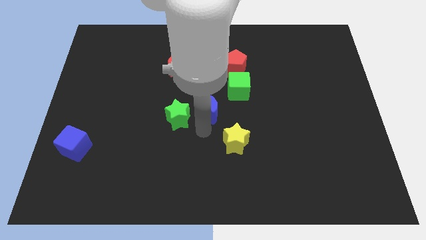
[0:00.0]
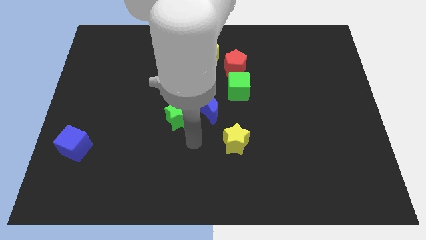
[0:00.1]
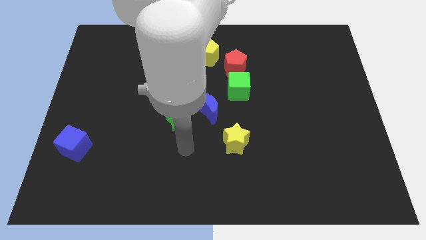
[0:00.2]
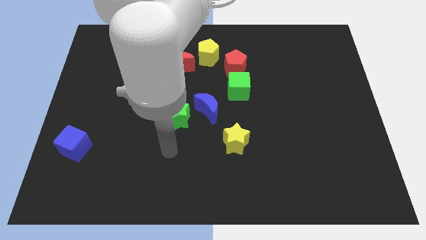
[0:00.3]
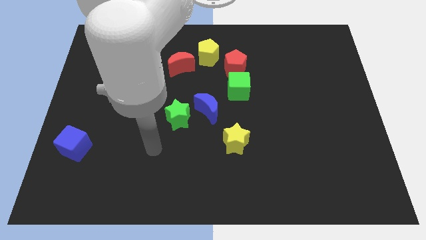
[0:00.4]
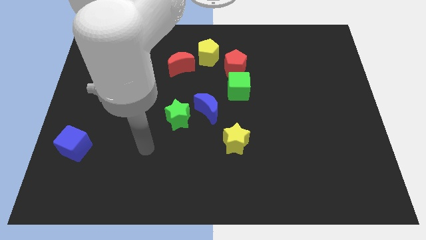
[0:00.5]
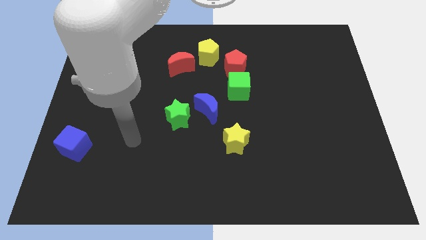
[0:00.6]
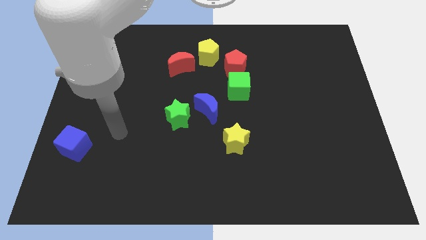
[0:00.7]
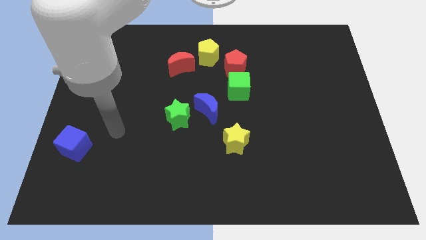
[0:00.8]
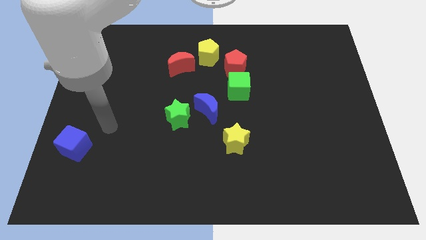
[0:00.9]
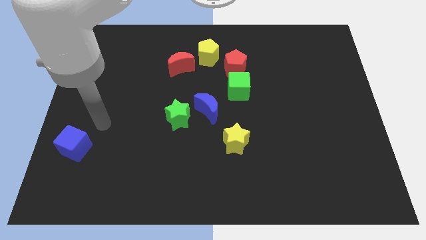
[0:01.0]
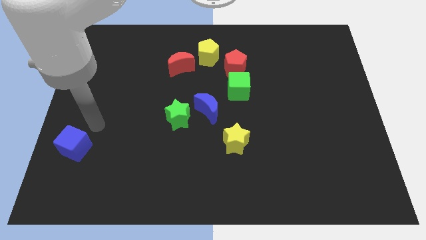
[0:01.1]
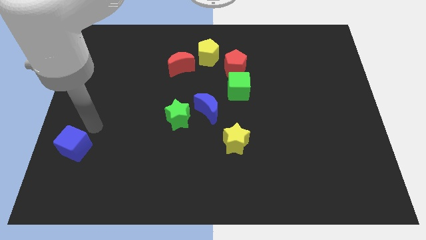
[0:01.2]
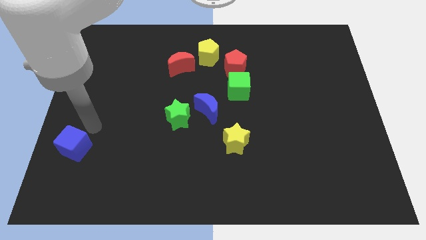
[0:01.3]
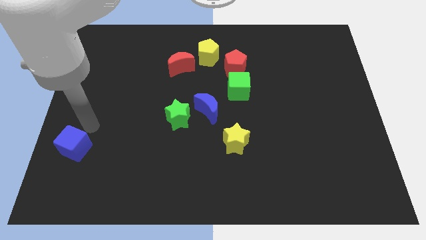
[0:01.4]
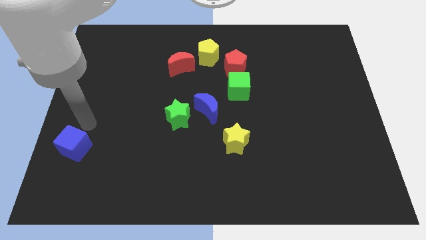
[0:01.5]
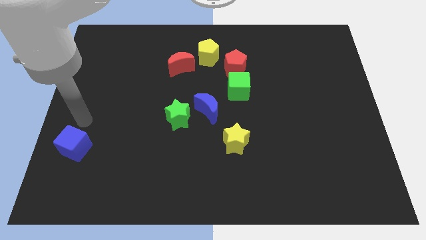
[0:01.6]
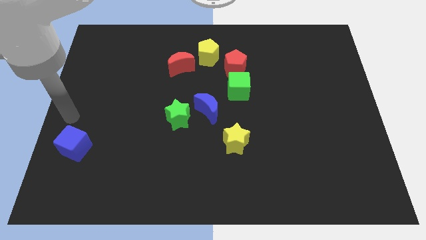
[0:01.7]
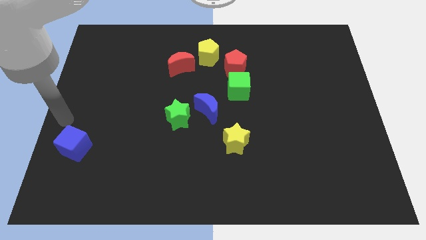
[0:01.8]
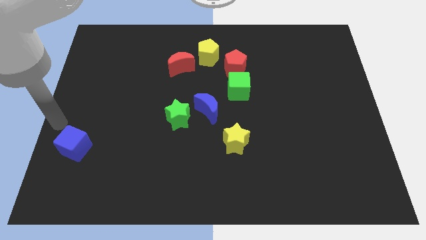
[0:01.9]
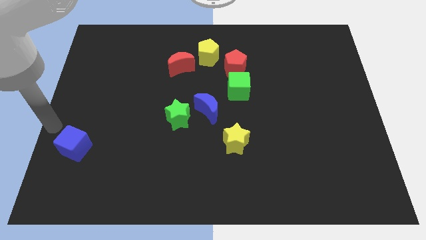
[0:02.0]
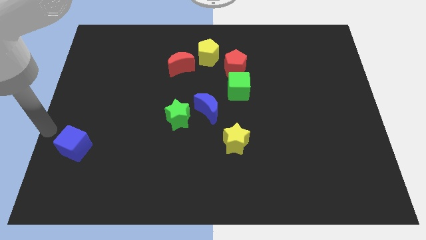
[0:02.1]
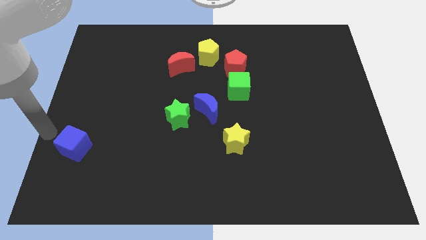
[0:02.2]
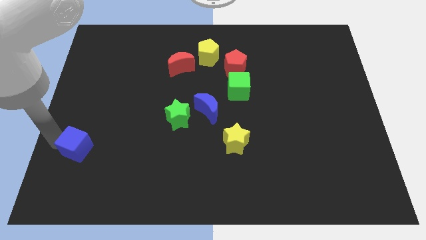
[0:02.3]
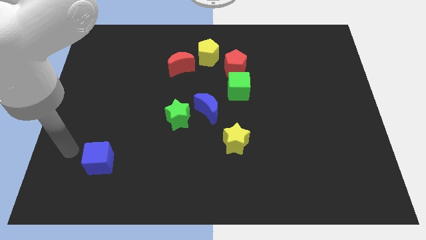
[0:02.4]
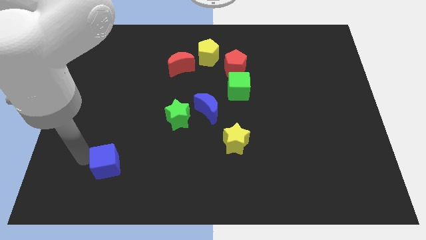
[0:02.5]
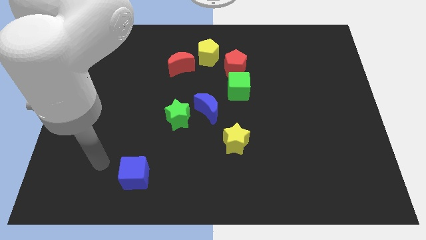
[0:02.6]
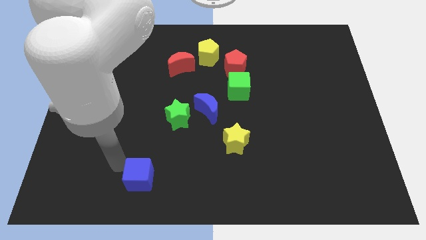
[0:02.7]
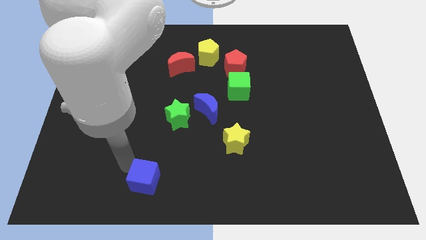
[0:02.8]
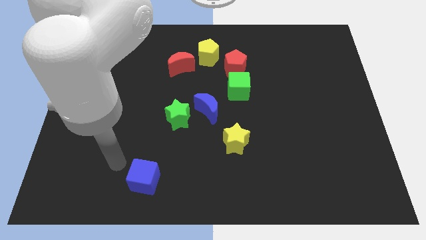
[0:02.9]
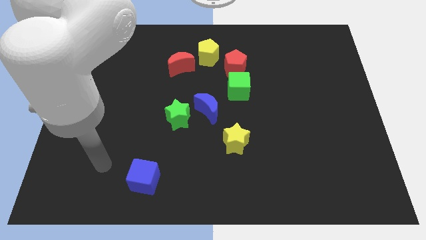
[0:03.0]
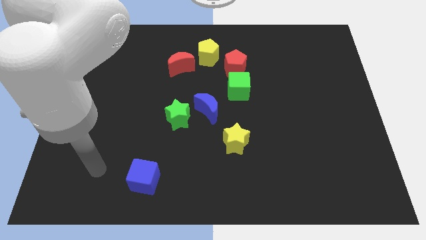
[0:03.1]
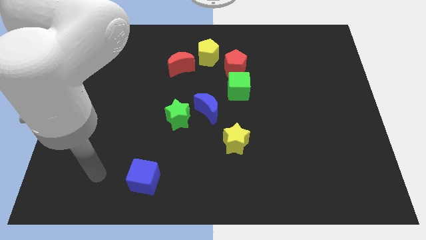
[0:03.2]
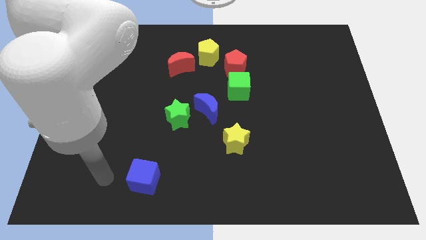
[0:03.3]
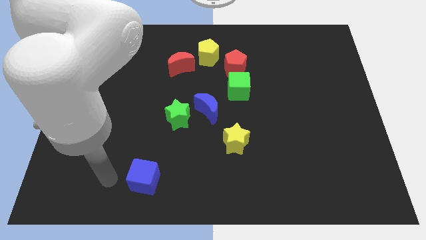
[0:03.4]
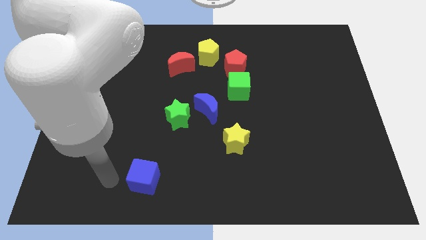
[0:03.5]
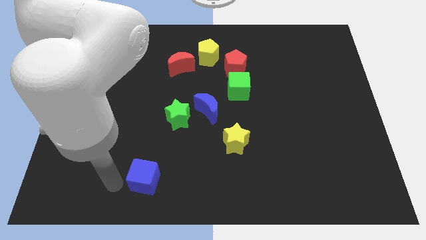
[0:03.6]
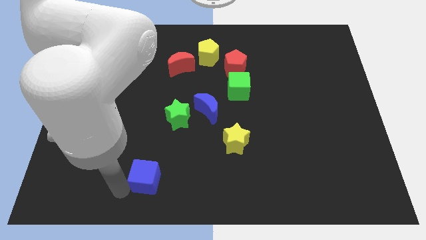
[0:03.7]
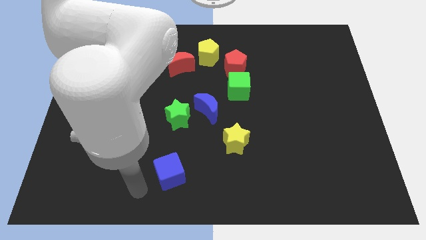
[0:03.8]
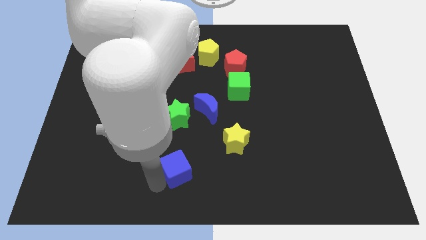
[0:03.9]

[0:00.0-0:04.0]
slide the blue cube vertically below the green star

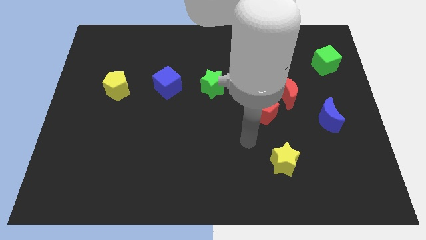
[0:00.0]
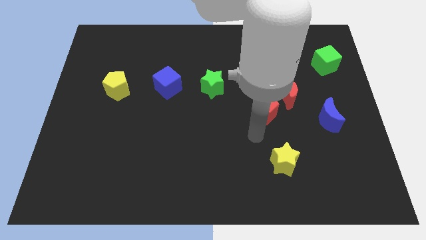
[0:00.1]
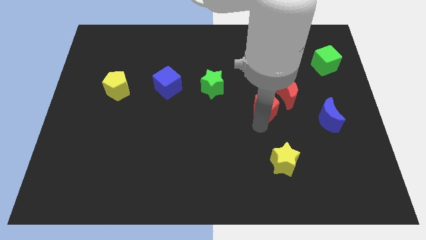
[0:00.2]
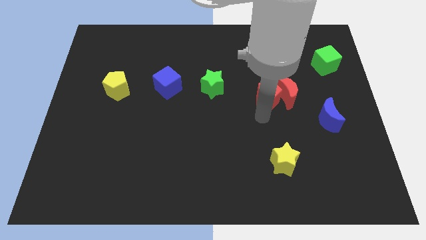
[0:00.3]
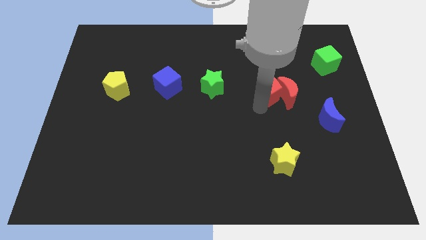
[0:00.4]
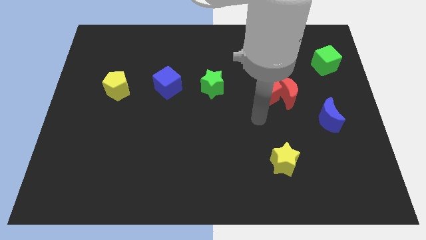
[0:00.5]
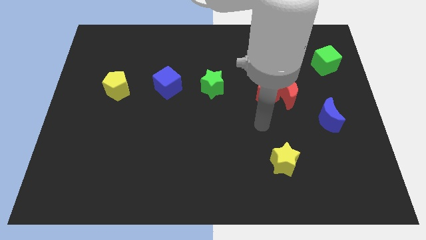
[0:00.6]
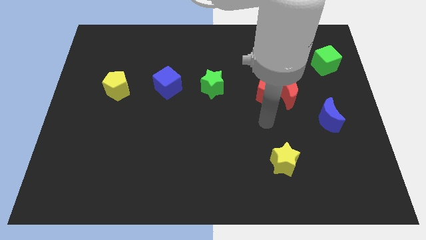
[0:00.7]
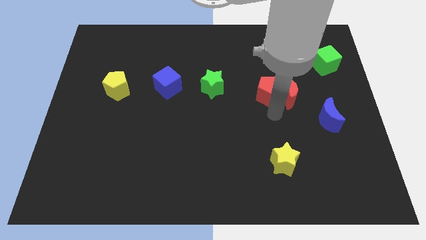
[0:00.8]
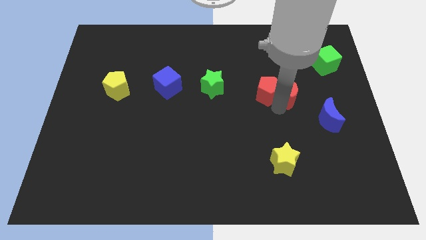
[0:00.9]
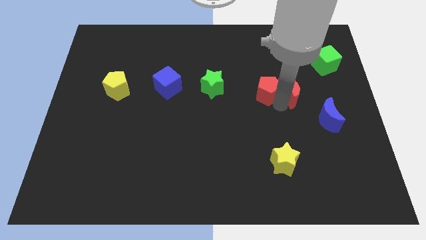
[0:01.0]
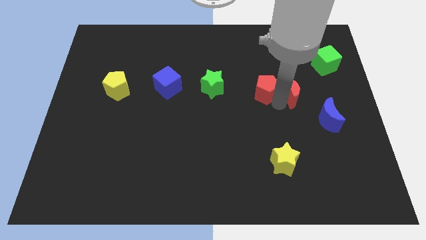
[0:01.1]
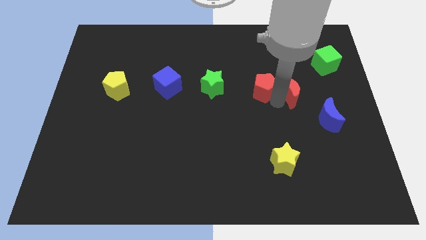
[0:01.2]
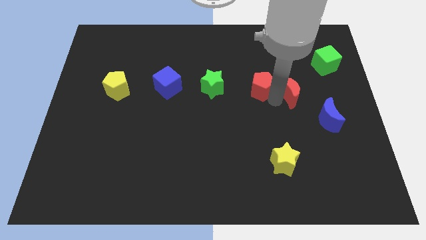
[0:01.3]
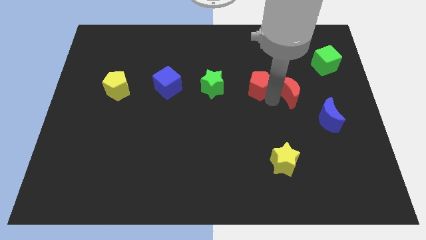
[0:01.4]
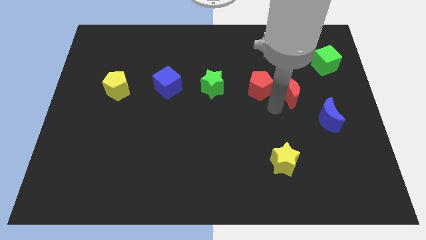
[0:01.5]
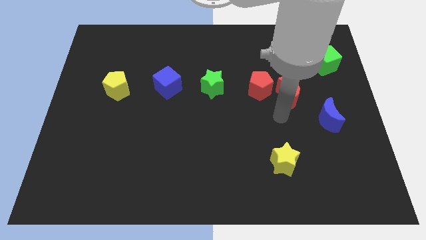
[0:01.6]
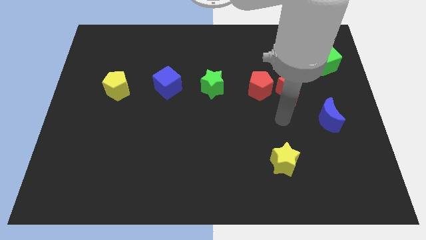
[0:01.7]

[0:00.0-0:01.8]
separate the red pentagon to the right of green star

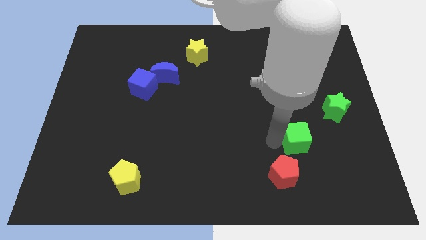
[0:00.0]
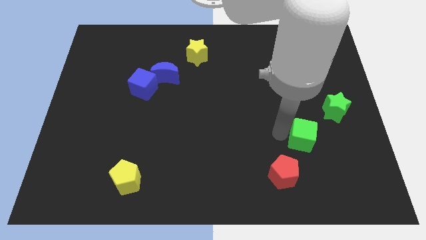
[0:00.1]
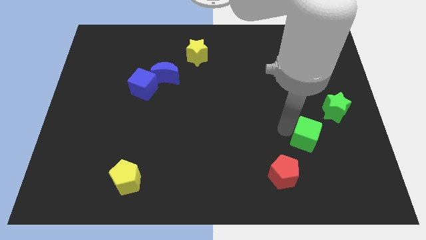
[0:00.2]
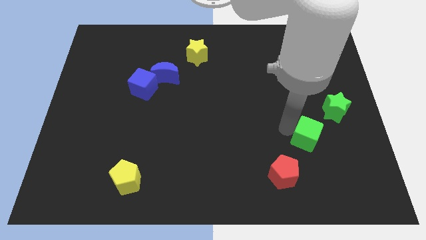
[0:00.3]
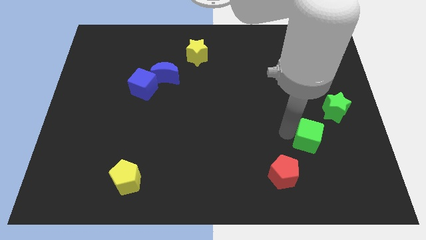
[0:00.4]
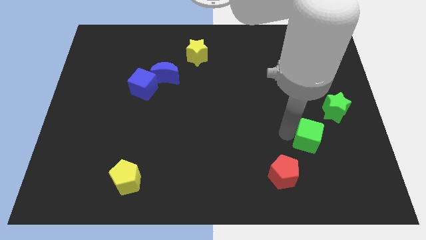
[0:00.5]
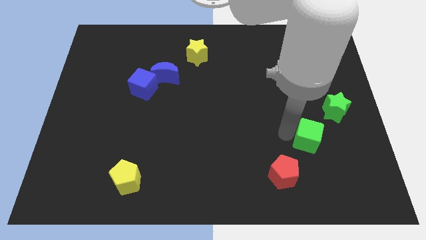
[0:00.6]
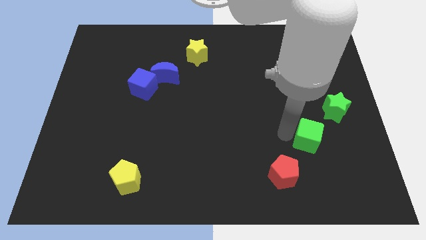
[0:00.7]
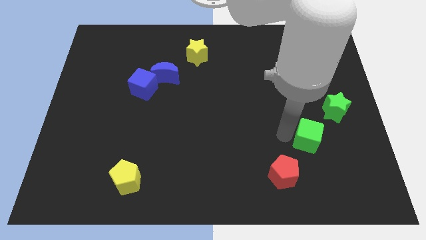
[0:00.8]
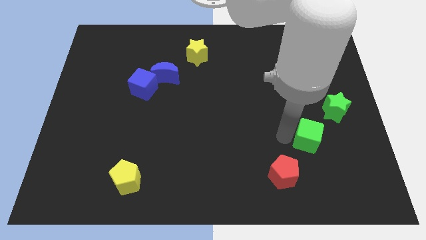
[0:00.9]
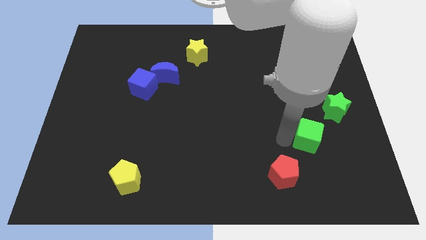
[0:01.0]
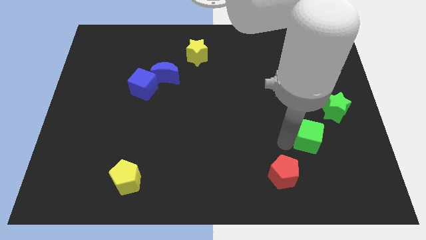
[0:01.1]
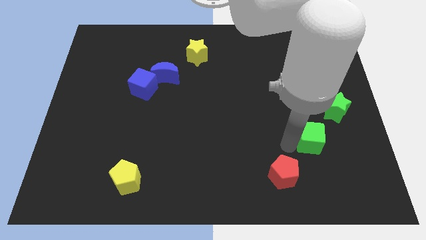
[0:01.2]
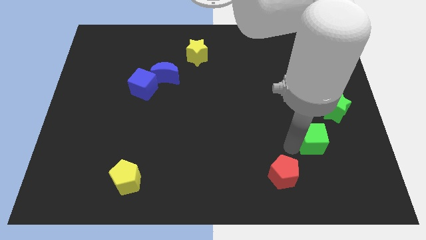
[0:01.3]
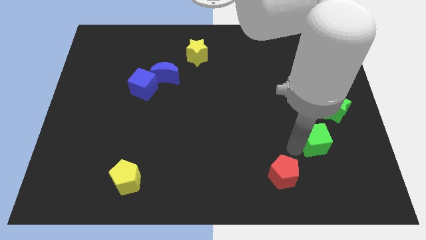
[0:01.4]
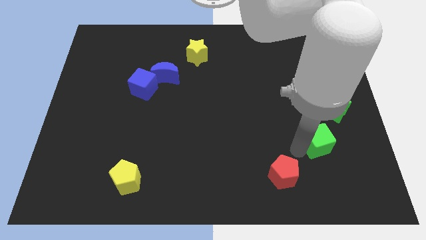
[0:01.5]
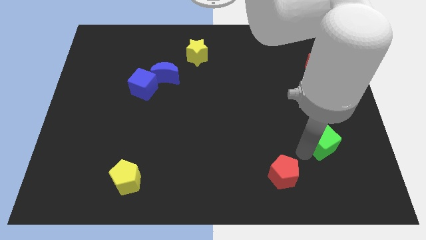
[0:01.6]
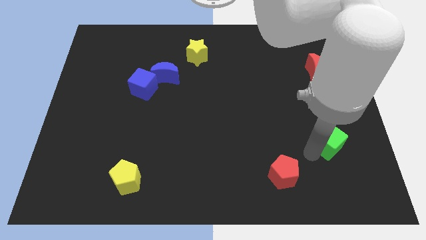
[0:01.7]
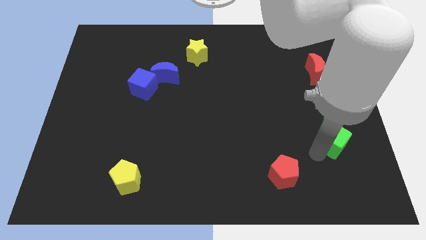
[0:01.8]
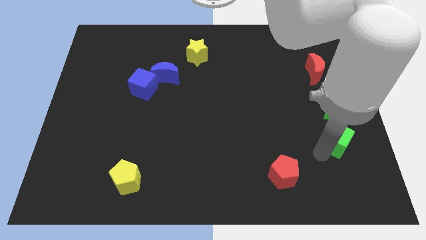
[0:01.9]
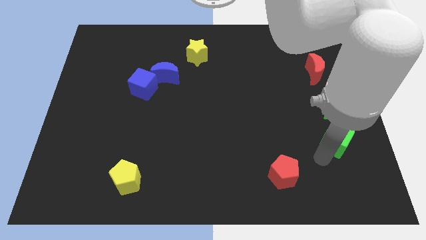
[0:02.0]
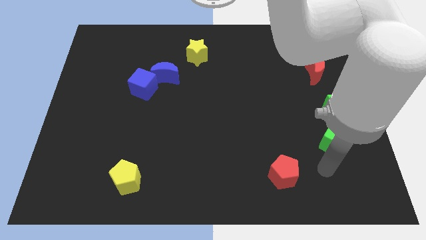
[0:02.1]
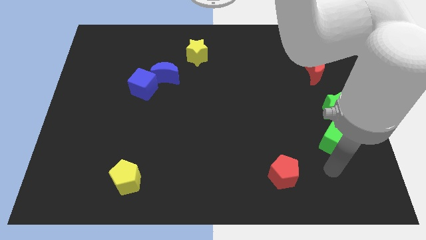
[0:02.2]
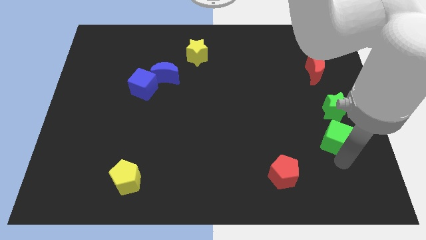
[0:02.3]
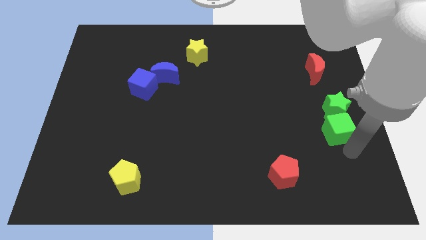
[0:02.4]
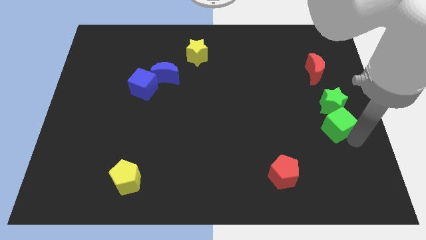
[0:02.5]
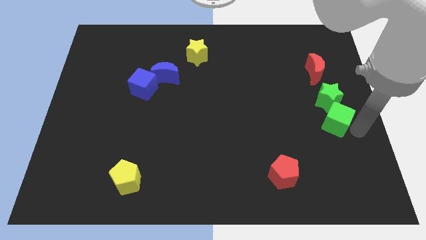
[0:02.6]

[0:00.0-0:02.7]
push the green cube below the green star

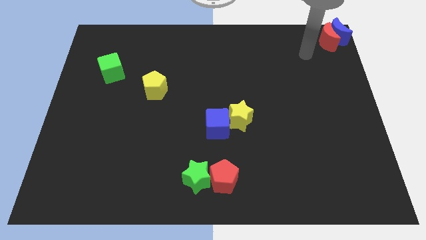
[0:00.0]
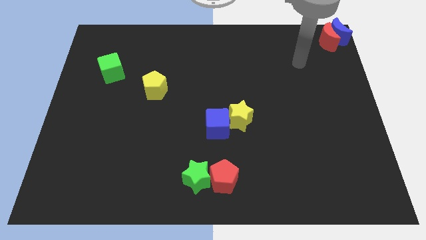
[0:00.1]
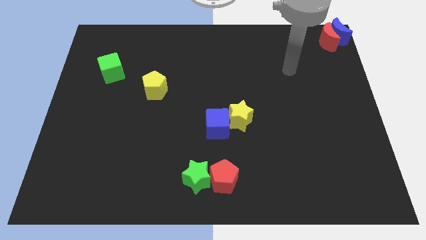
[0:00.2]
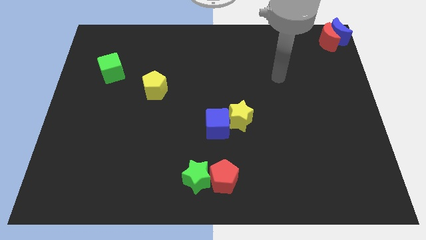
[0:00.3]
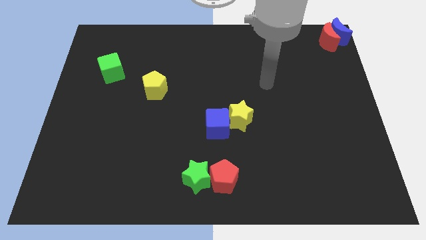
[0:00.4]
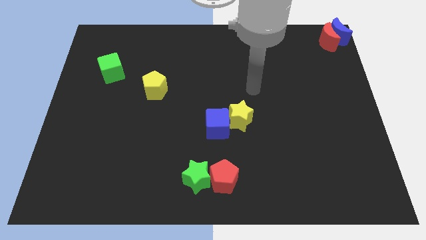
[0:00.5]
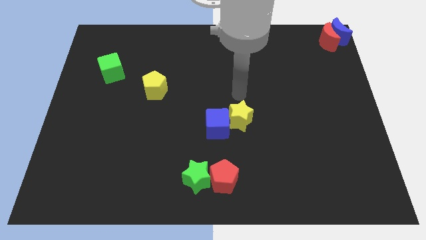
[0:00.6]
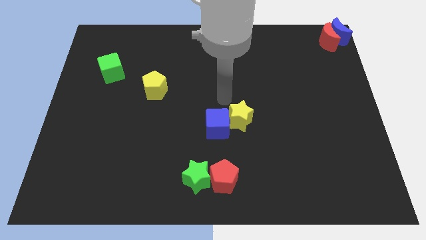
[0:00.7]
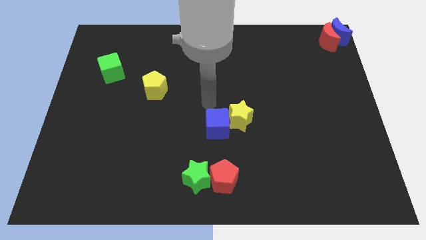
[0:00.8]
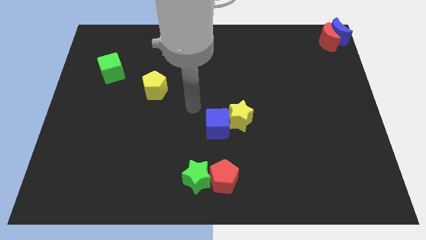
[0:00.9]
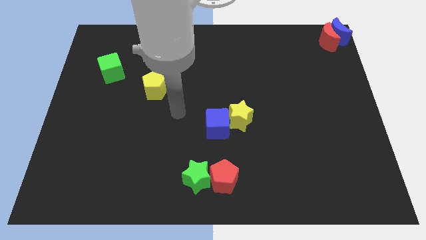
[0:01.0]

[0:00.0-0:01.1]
place your hand in between the yellow pentagon and blue cube
